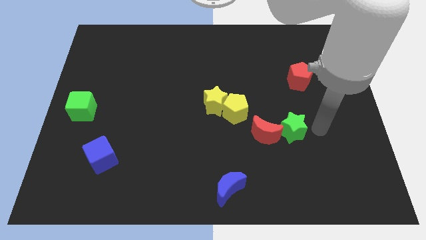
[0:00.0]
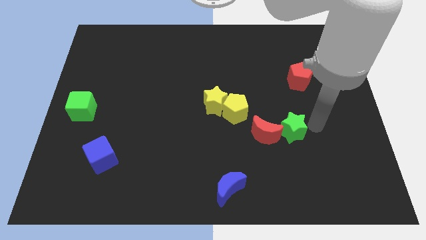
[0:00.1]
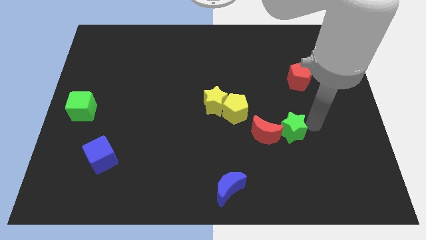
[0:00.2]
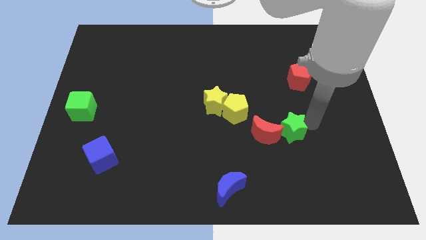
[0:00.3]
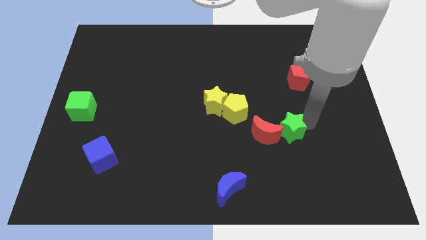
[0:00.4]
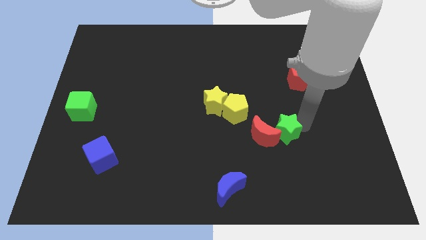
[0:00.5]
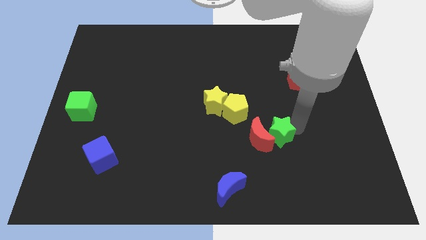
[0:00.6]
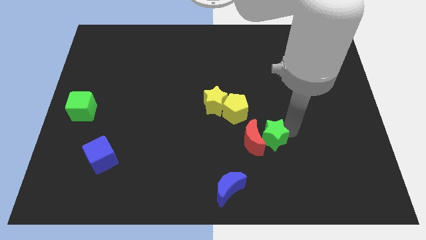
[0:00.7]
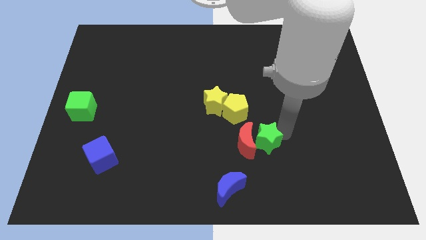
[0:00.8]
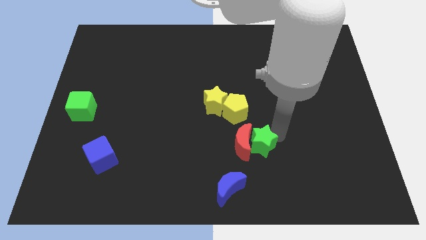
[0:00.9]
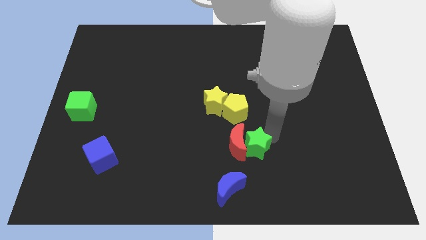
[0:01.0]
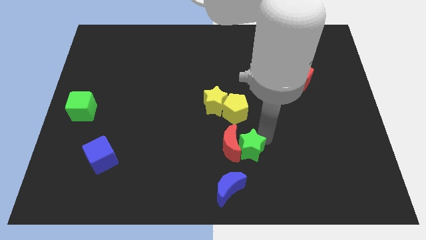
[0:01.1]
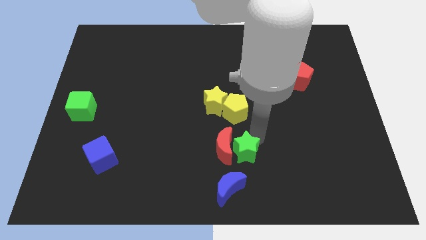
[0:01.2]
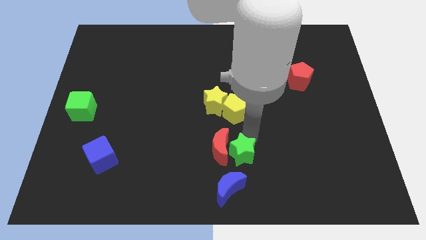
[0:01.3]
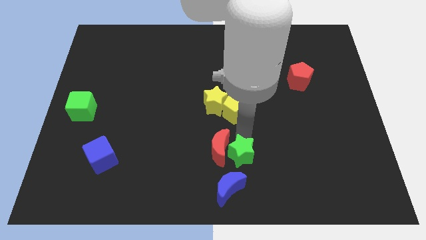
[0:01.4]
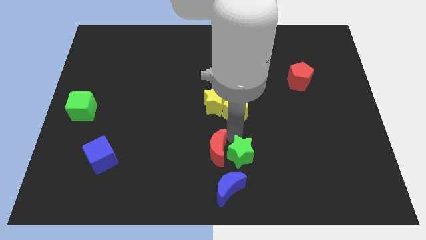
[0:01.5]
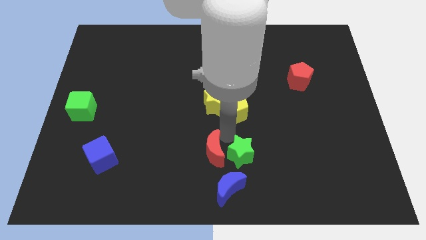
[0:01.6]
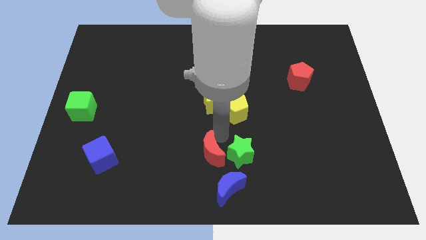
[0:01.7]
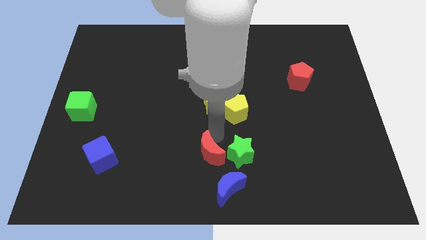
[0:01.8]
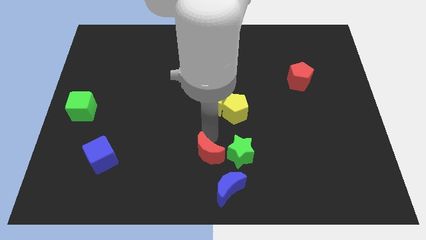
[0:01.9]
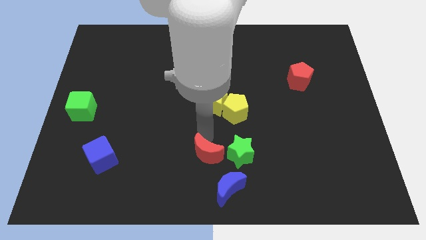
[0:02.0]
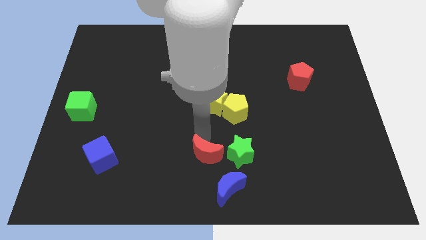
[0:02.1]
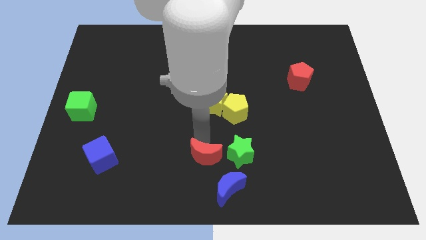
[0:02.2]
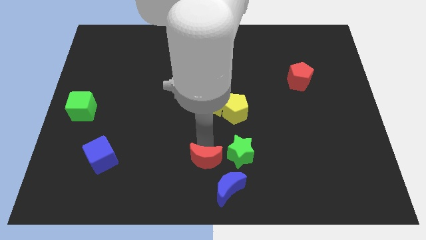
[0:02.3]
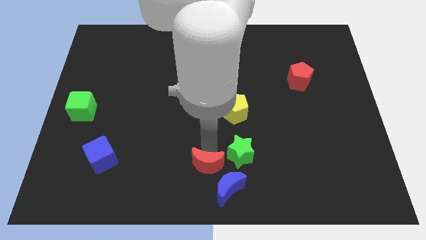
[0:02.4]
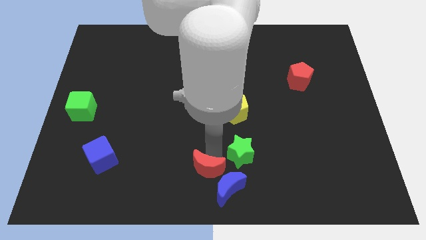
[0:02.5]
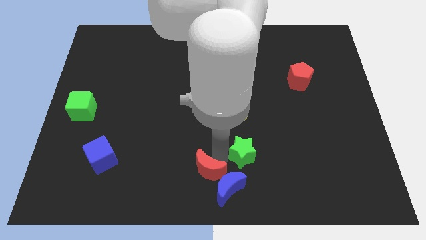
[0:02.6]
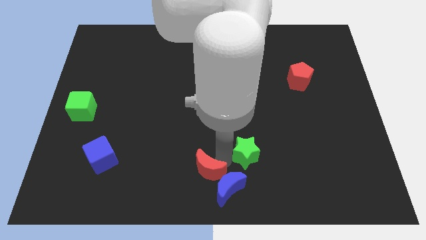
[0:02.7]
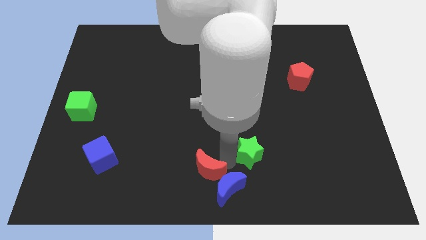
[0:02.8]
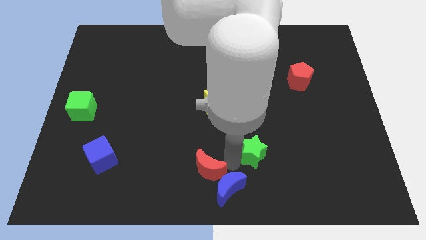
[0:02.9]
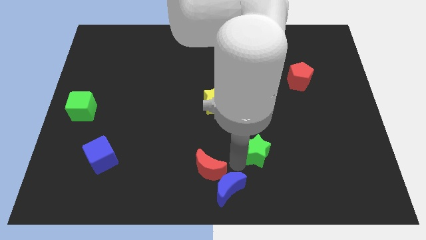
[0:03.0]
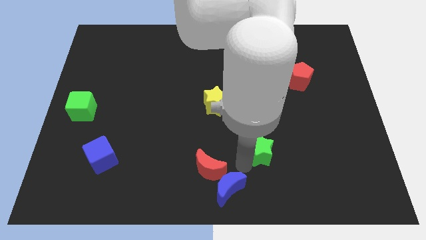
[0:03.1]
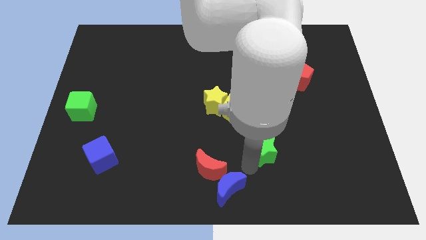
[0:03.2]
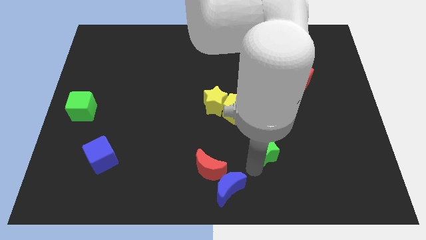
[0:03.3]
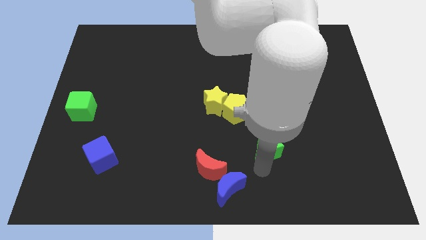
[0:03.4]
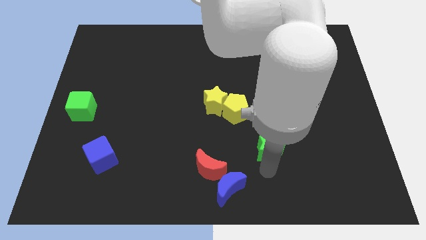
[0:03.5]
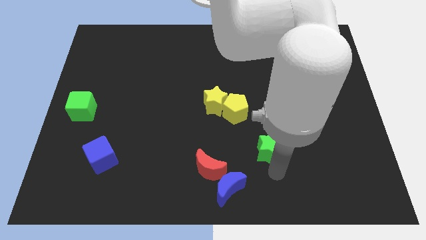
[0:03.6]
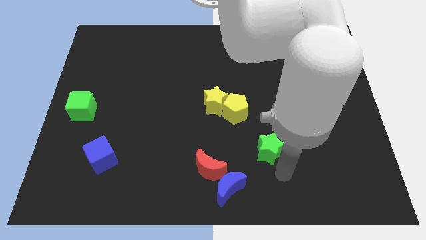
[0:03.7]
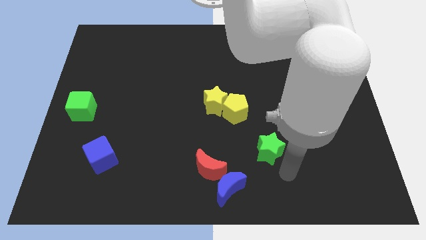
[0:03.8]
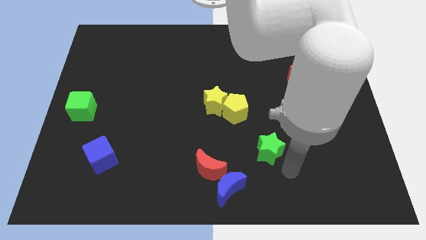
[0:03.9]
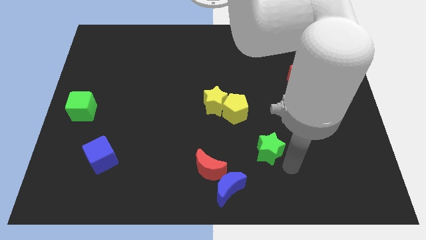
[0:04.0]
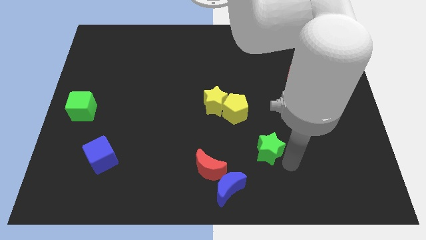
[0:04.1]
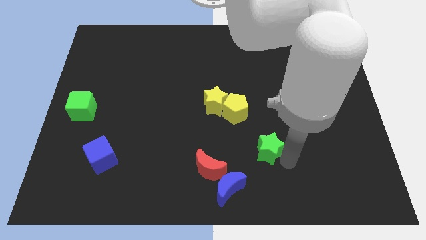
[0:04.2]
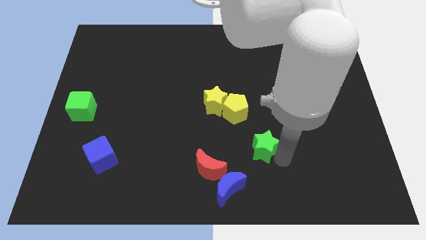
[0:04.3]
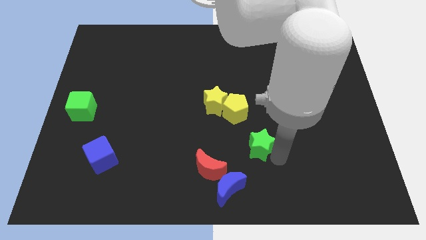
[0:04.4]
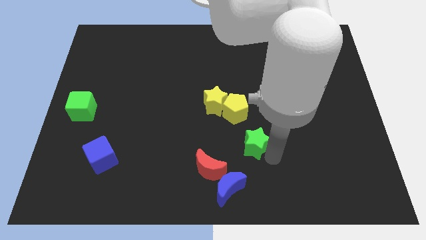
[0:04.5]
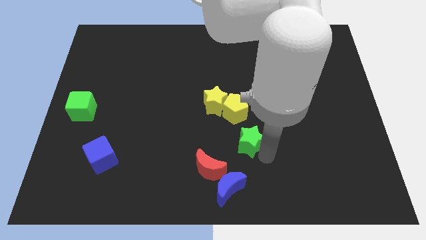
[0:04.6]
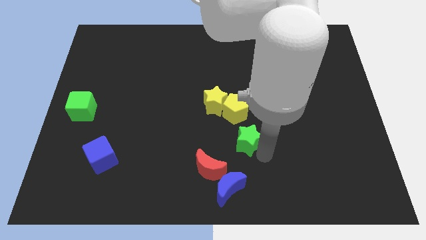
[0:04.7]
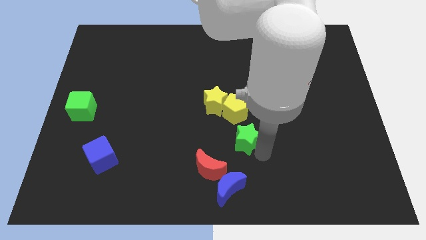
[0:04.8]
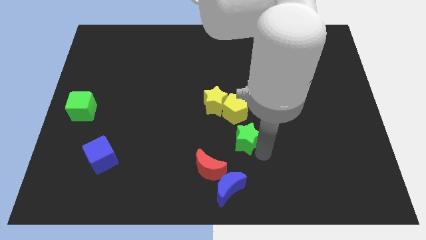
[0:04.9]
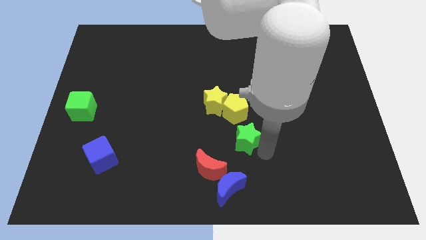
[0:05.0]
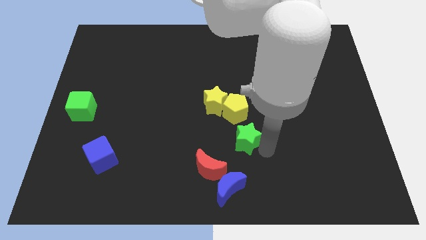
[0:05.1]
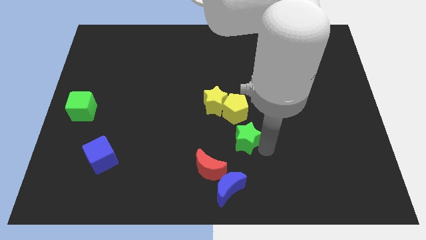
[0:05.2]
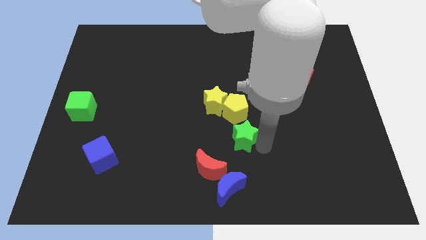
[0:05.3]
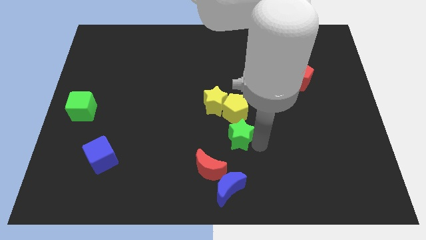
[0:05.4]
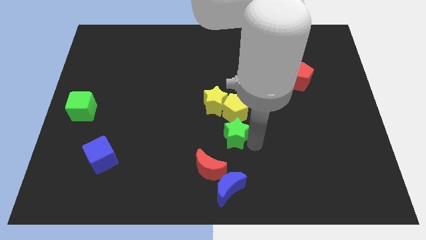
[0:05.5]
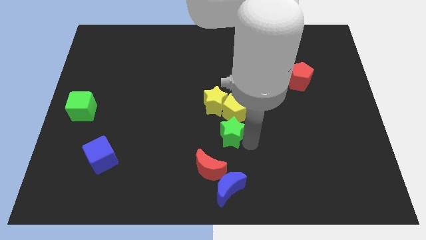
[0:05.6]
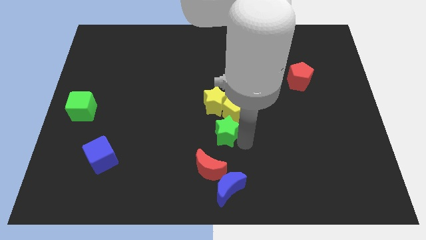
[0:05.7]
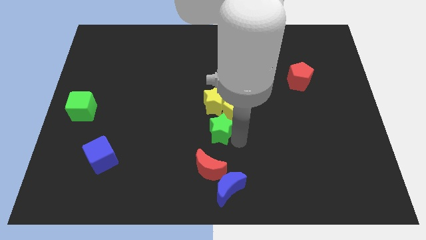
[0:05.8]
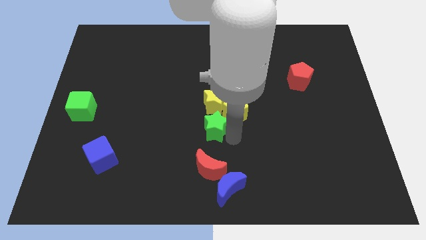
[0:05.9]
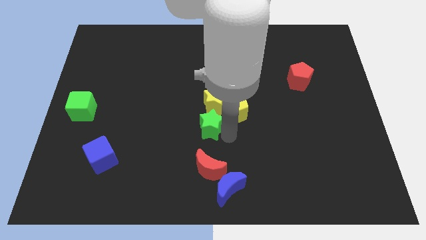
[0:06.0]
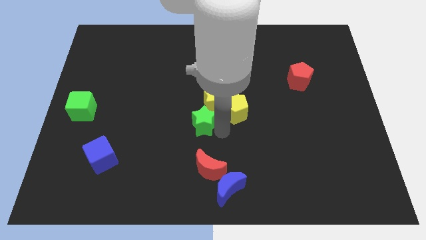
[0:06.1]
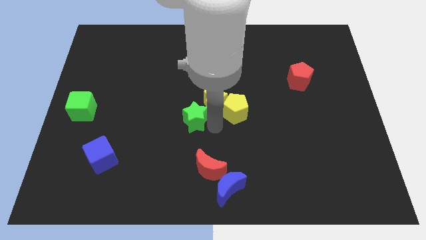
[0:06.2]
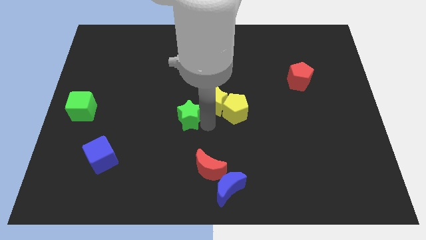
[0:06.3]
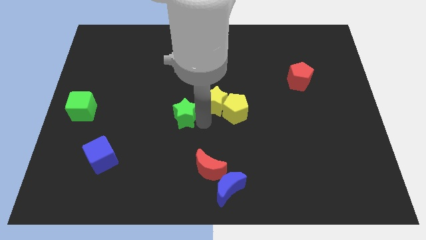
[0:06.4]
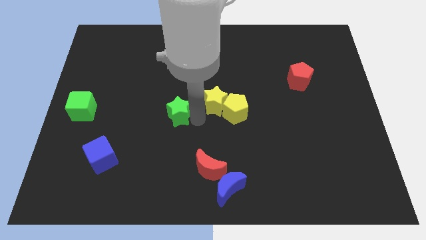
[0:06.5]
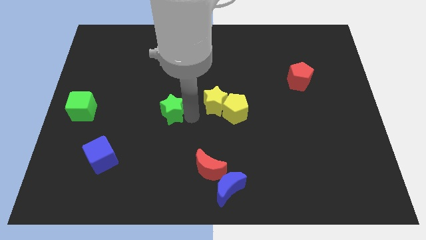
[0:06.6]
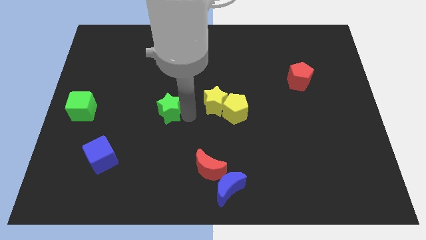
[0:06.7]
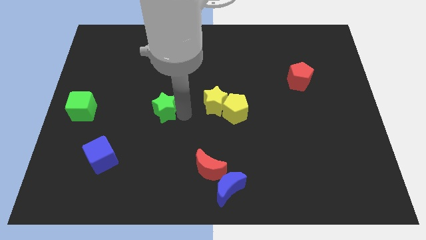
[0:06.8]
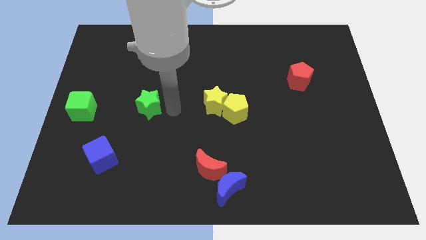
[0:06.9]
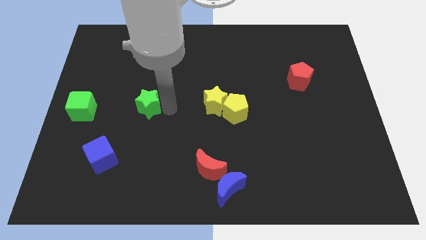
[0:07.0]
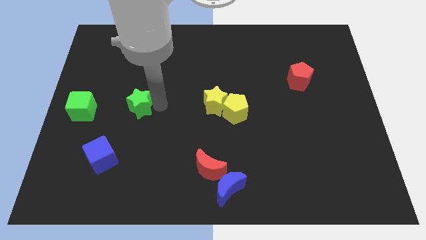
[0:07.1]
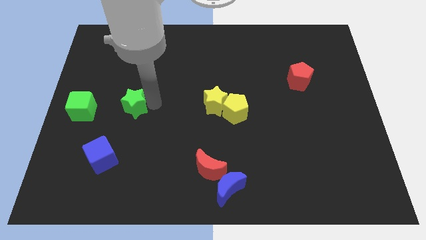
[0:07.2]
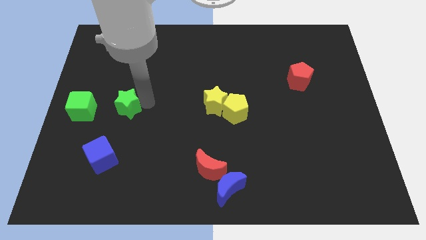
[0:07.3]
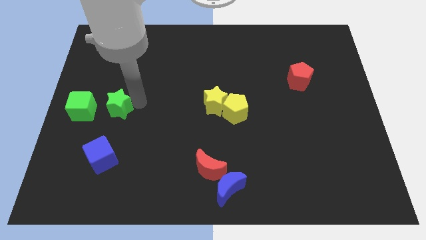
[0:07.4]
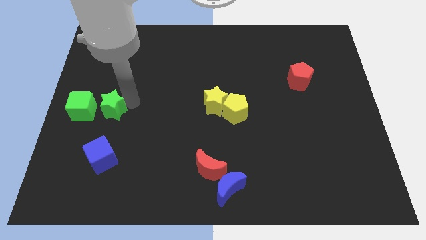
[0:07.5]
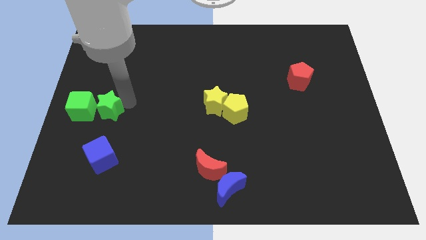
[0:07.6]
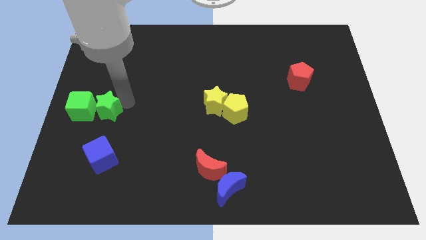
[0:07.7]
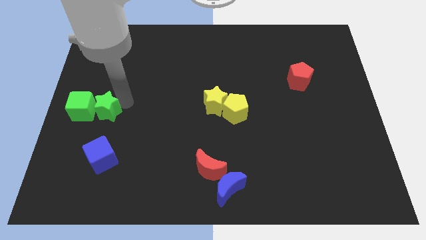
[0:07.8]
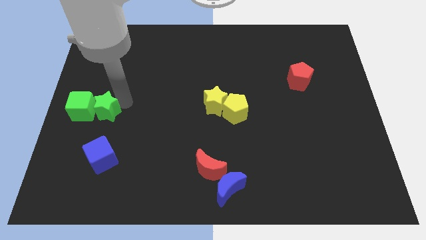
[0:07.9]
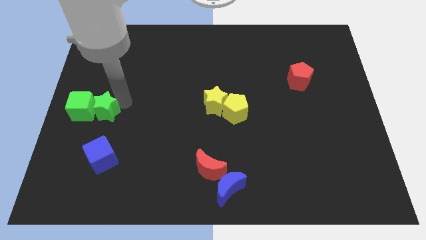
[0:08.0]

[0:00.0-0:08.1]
make a pair of green blocks at the center left of the table

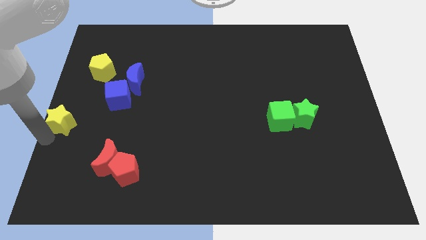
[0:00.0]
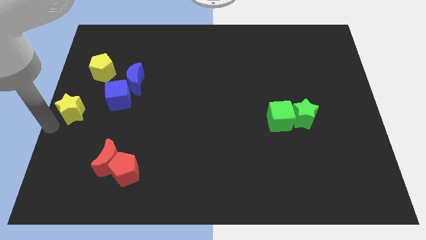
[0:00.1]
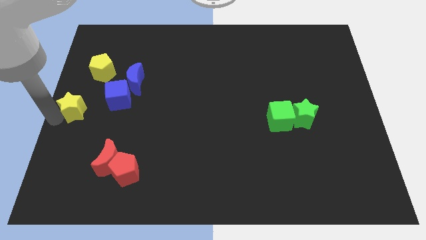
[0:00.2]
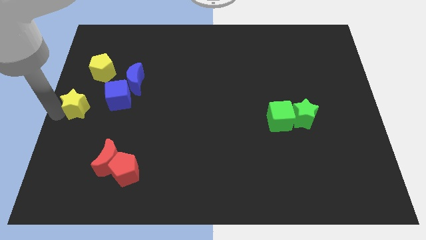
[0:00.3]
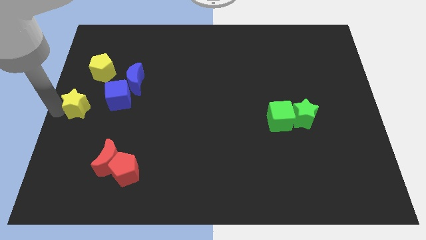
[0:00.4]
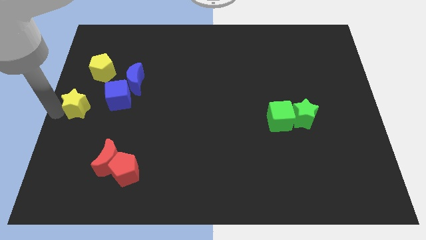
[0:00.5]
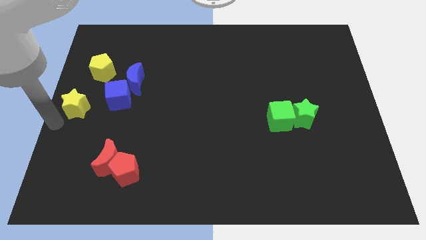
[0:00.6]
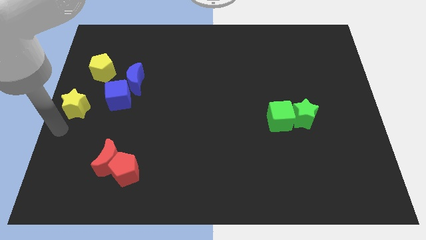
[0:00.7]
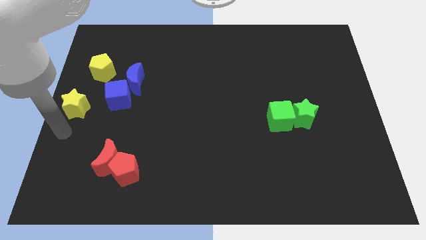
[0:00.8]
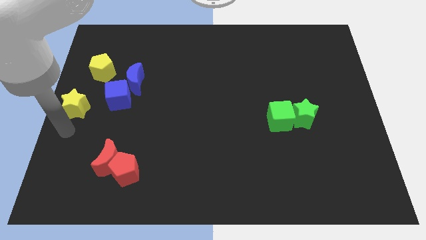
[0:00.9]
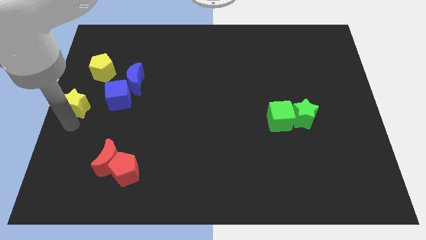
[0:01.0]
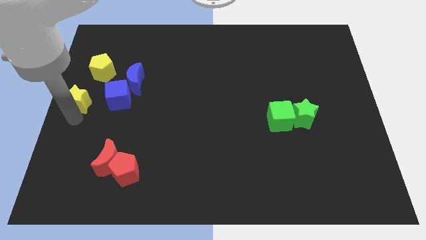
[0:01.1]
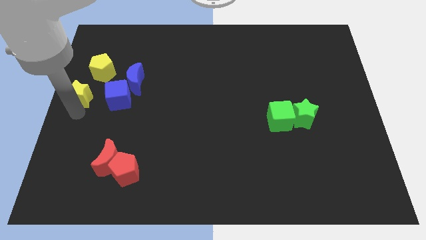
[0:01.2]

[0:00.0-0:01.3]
move the yellow star towards the upwards of the board
